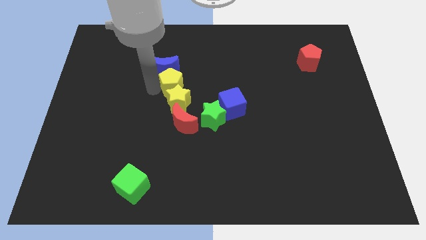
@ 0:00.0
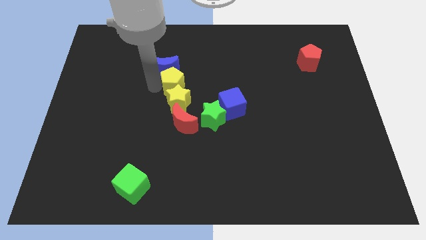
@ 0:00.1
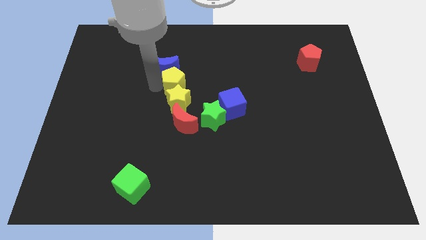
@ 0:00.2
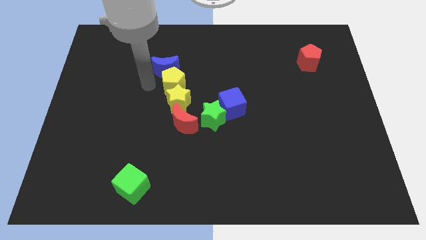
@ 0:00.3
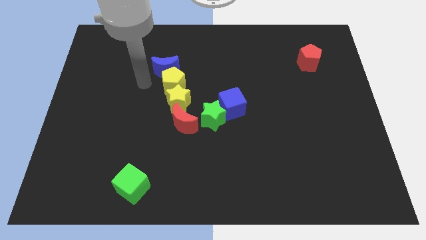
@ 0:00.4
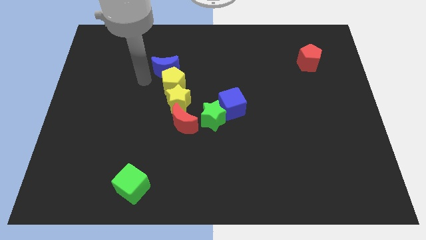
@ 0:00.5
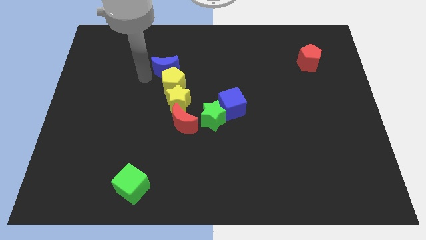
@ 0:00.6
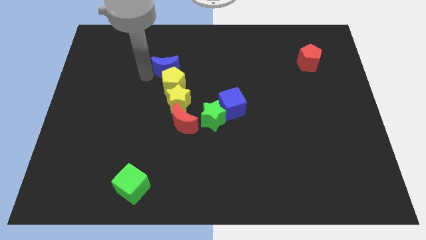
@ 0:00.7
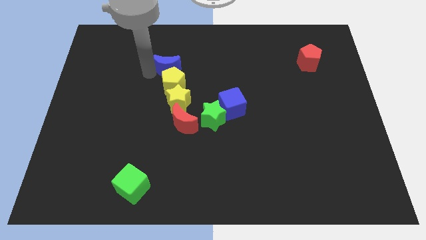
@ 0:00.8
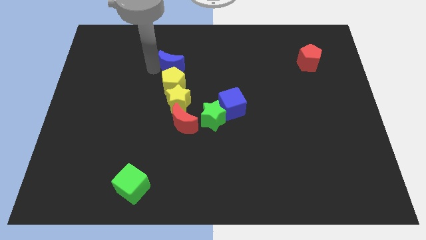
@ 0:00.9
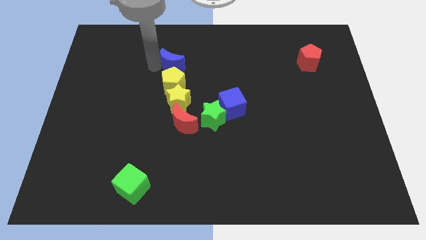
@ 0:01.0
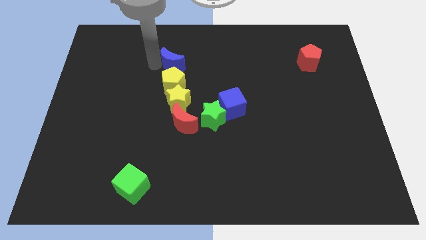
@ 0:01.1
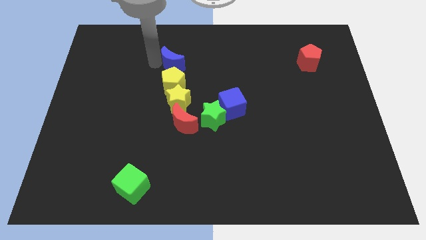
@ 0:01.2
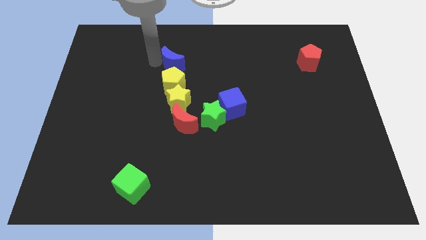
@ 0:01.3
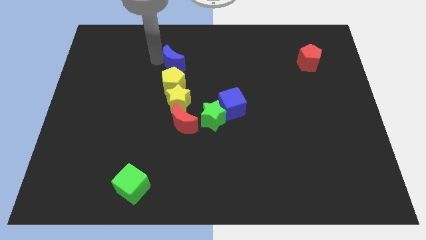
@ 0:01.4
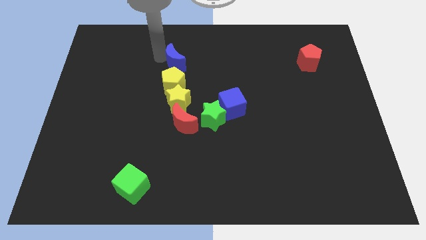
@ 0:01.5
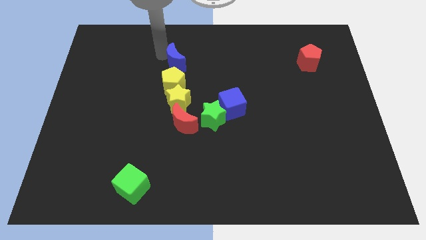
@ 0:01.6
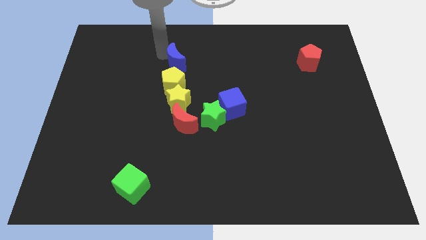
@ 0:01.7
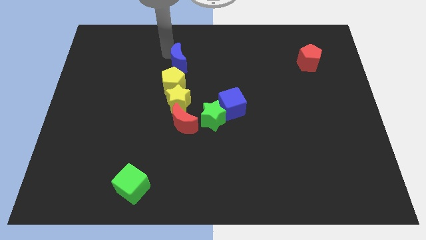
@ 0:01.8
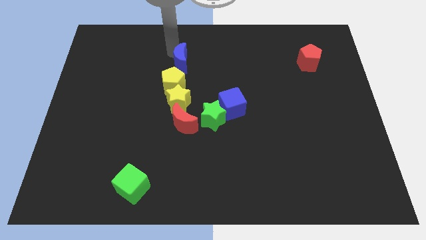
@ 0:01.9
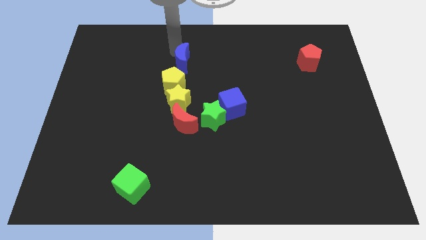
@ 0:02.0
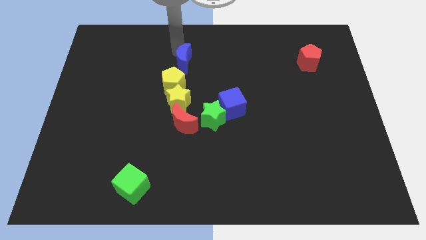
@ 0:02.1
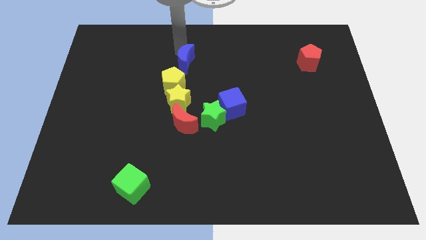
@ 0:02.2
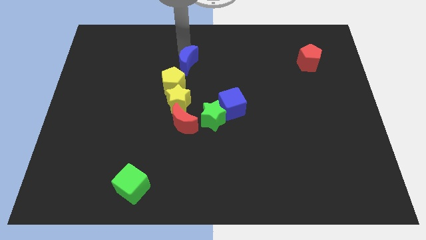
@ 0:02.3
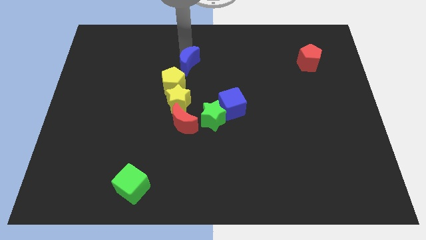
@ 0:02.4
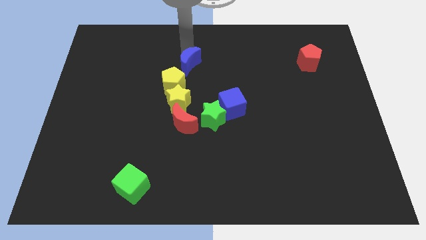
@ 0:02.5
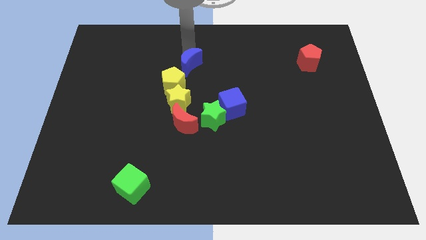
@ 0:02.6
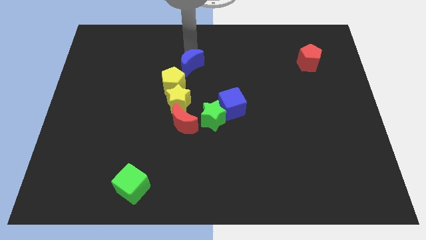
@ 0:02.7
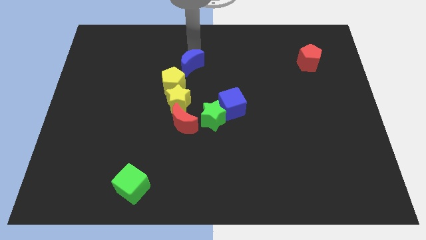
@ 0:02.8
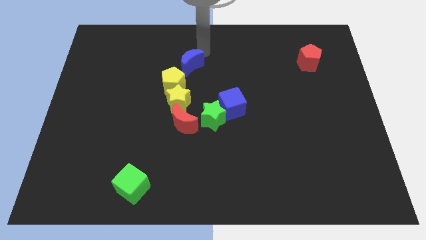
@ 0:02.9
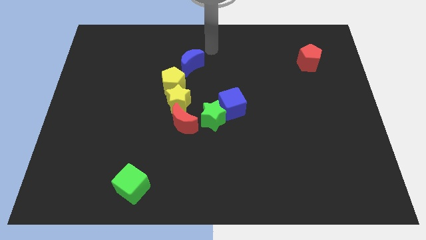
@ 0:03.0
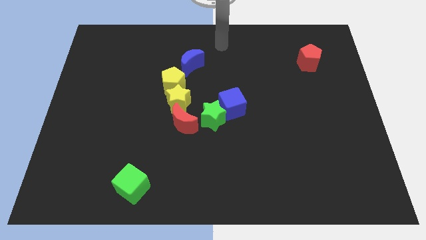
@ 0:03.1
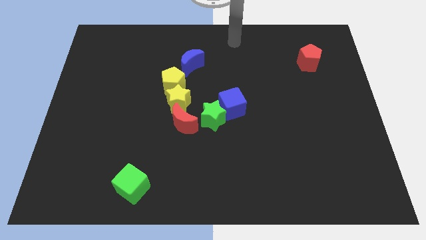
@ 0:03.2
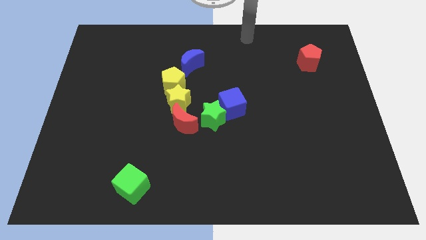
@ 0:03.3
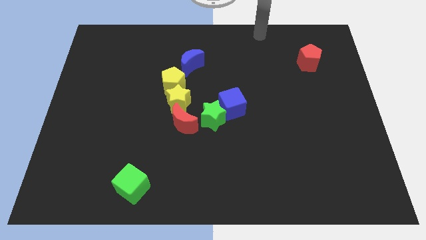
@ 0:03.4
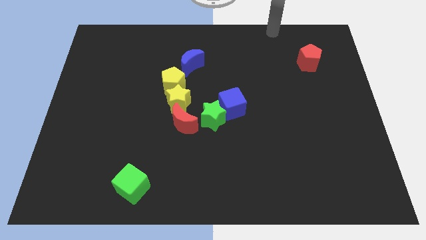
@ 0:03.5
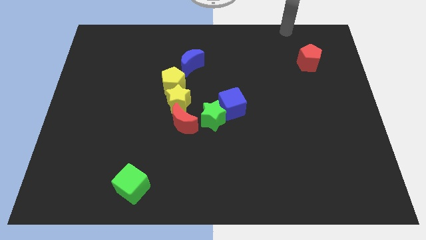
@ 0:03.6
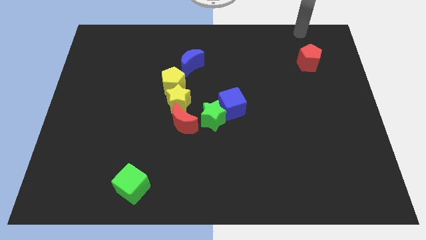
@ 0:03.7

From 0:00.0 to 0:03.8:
drag blue moon to the top right of yellow pentagon

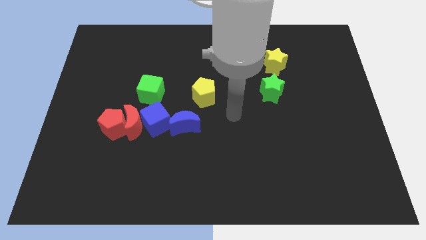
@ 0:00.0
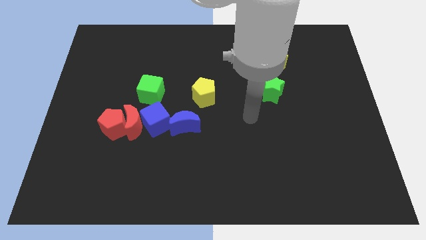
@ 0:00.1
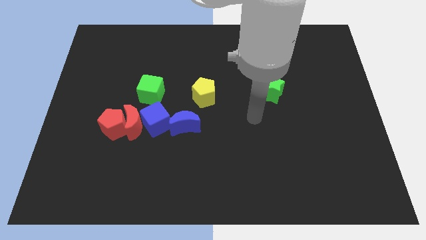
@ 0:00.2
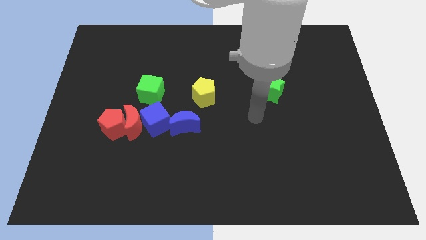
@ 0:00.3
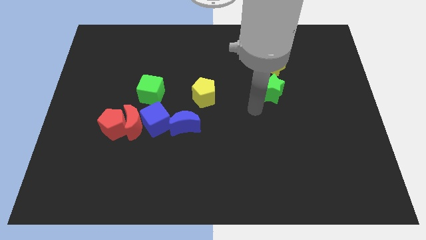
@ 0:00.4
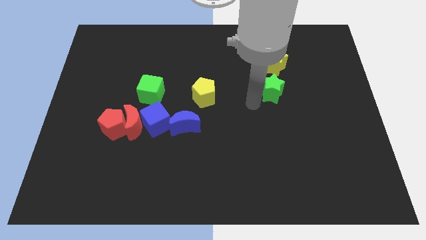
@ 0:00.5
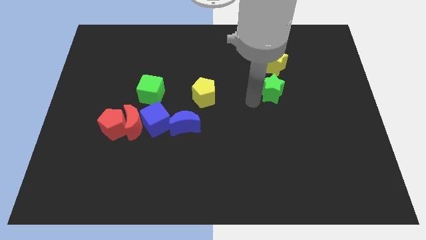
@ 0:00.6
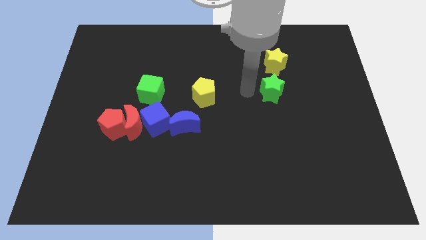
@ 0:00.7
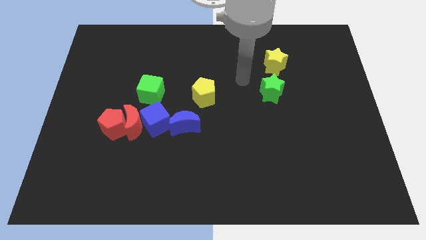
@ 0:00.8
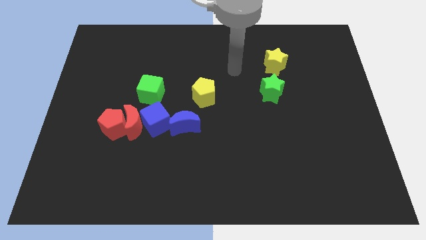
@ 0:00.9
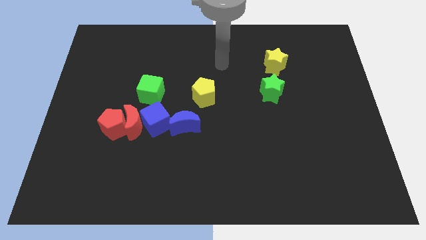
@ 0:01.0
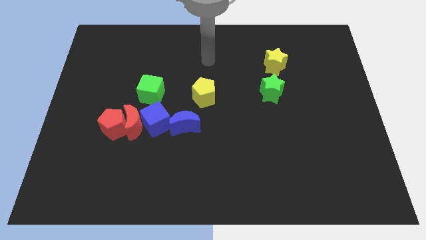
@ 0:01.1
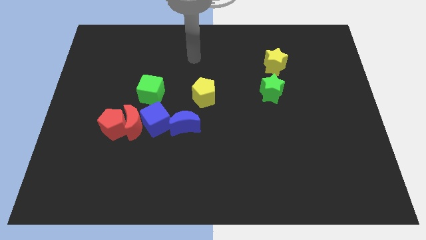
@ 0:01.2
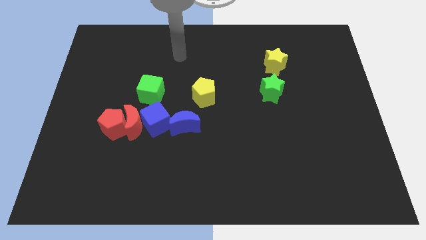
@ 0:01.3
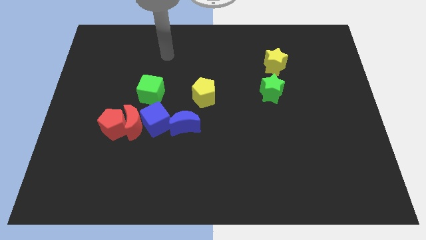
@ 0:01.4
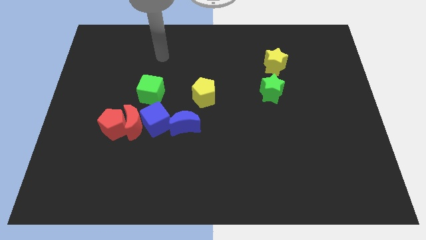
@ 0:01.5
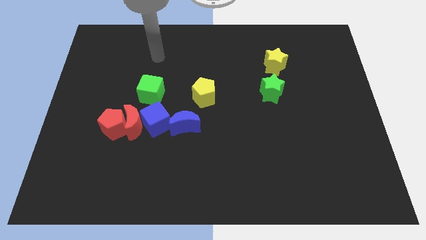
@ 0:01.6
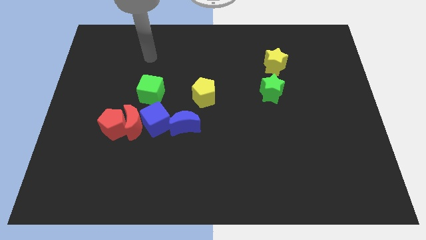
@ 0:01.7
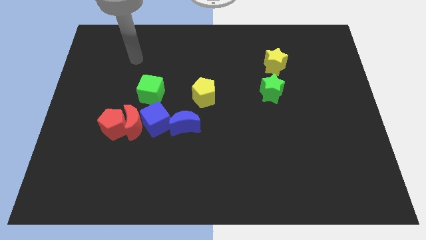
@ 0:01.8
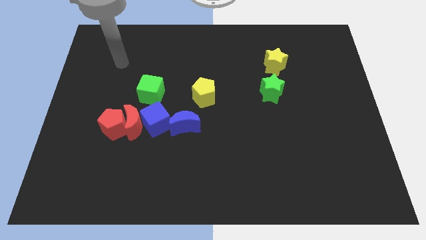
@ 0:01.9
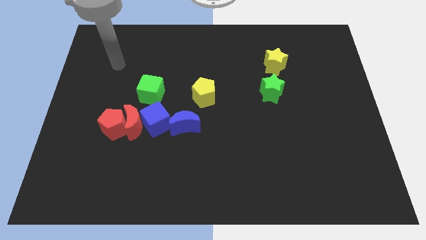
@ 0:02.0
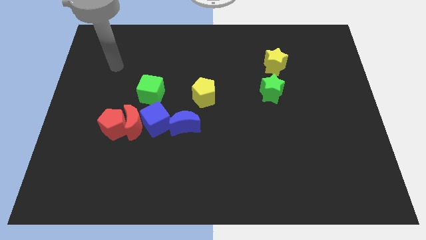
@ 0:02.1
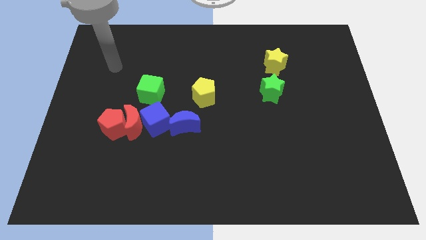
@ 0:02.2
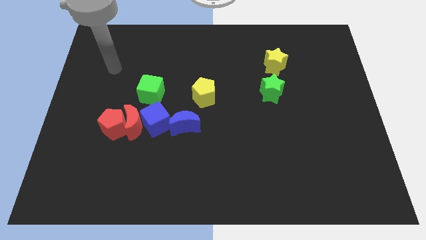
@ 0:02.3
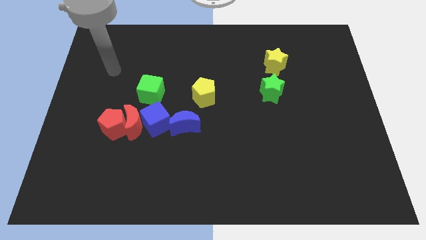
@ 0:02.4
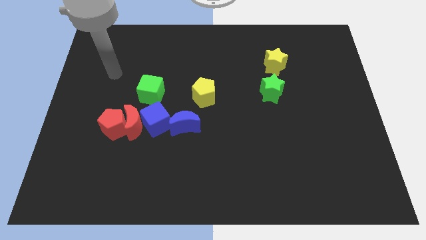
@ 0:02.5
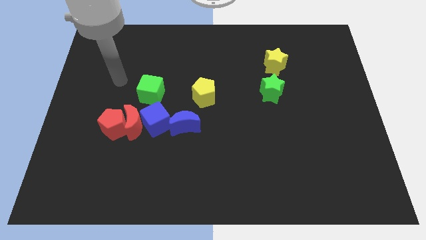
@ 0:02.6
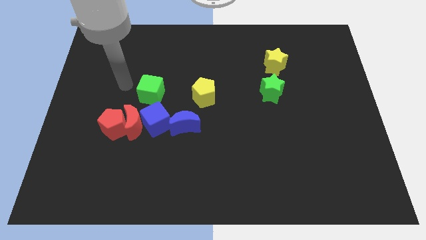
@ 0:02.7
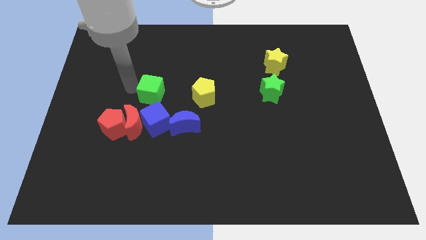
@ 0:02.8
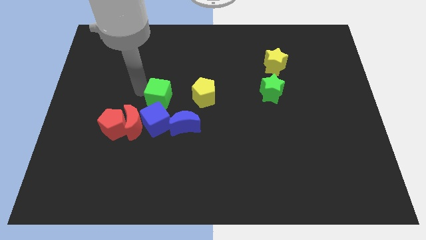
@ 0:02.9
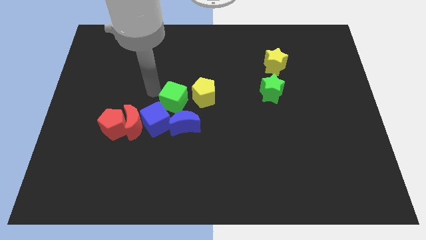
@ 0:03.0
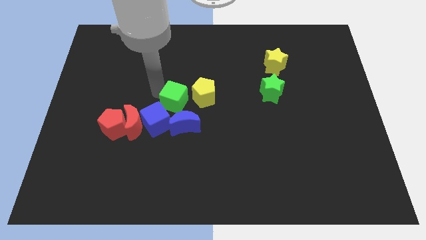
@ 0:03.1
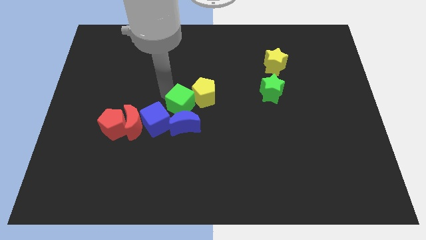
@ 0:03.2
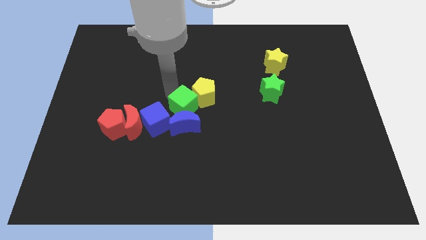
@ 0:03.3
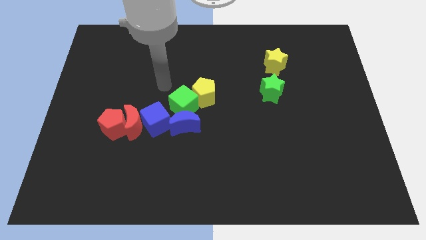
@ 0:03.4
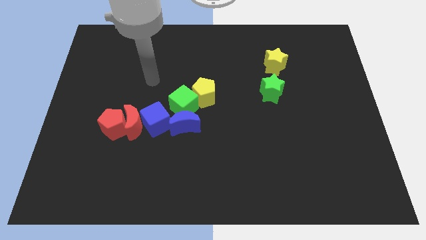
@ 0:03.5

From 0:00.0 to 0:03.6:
push the green cube to the top of the blue crescent

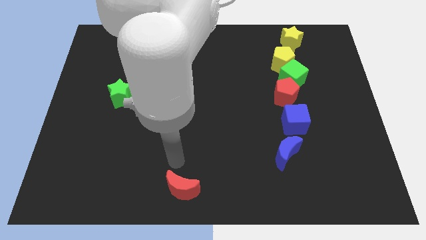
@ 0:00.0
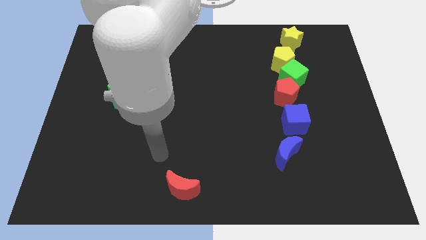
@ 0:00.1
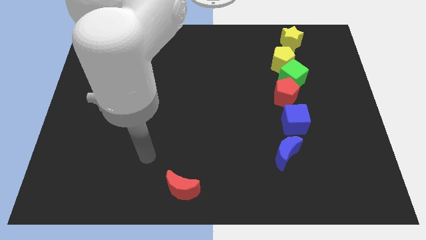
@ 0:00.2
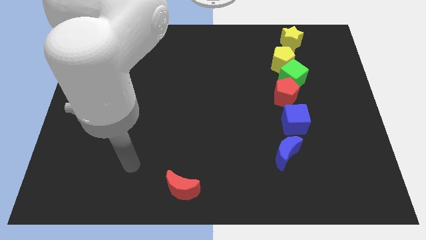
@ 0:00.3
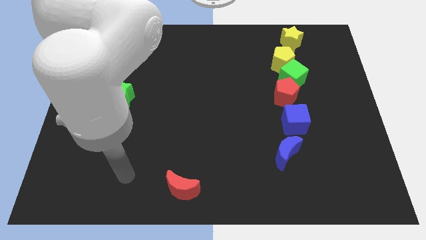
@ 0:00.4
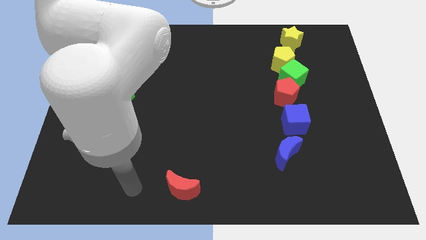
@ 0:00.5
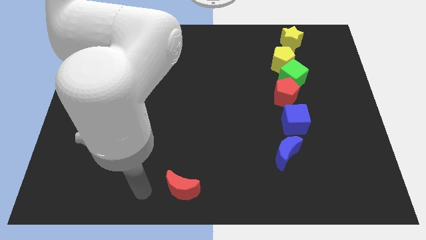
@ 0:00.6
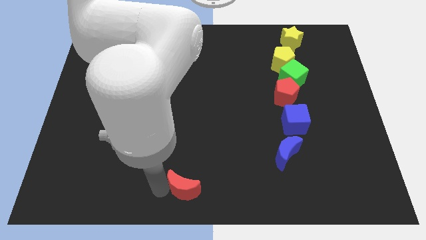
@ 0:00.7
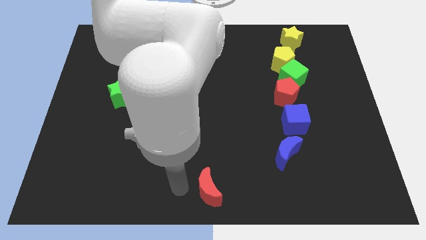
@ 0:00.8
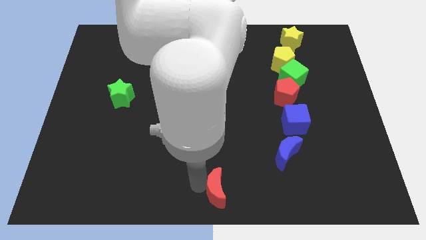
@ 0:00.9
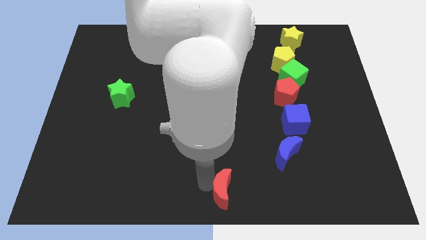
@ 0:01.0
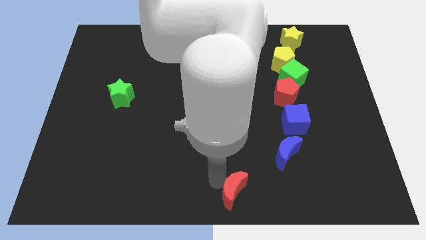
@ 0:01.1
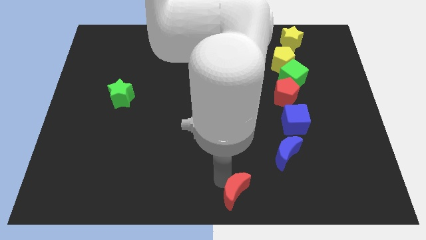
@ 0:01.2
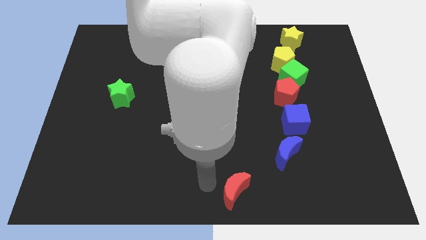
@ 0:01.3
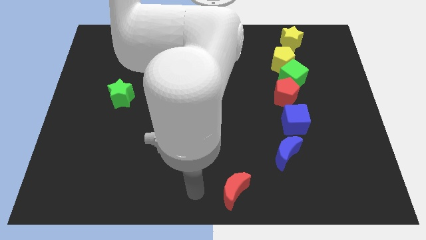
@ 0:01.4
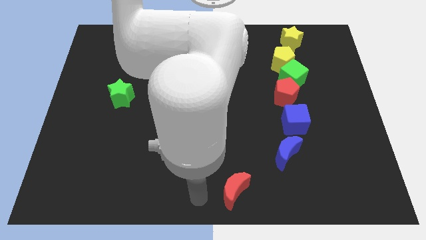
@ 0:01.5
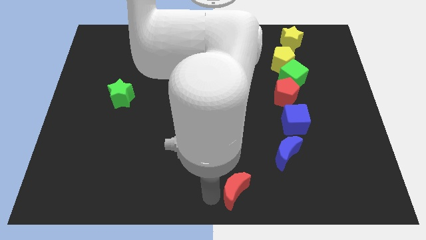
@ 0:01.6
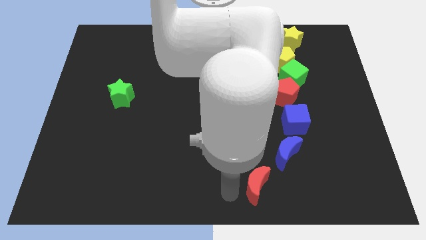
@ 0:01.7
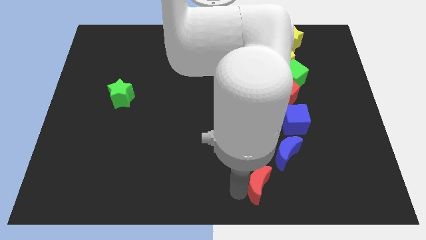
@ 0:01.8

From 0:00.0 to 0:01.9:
place red moon to the bottom left of red moon
